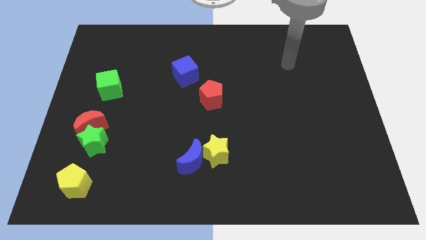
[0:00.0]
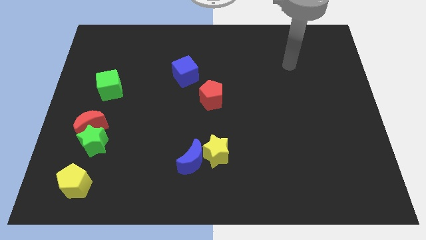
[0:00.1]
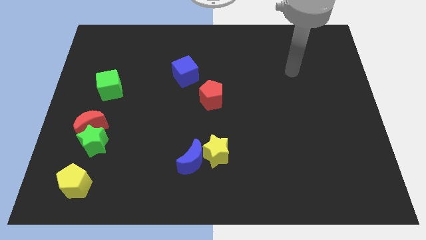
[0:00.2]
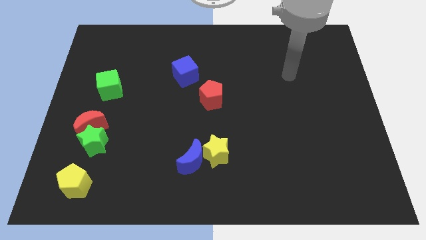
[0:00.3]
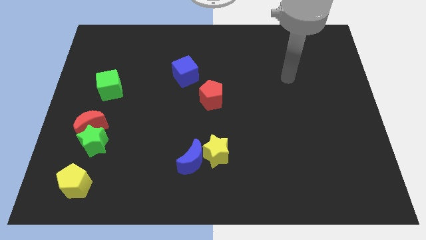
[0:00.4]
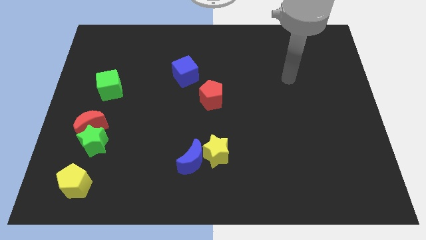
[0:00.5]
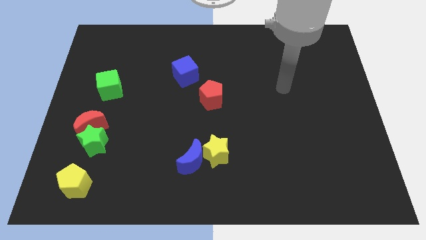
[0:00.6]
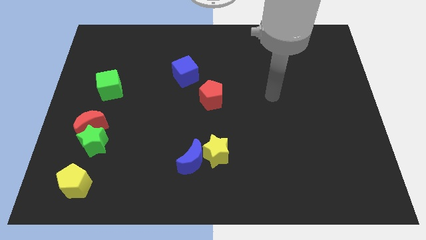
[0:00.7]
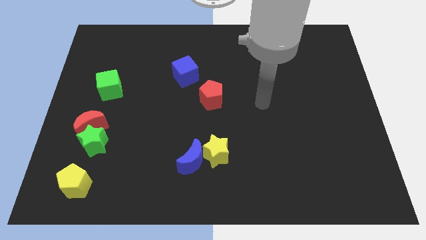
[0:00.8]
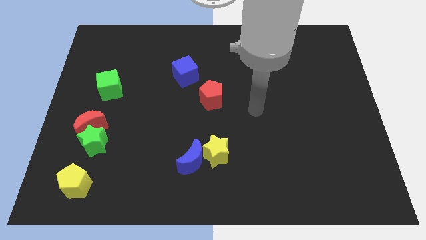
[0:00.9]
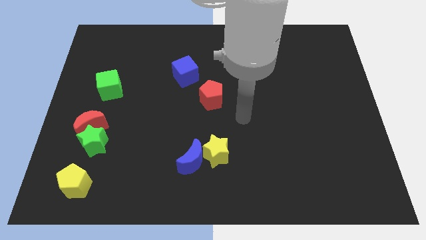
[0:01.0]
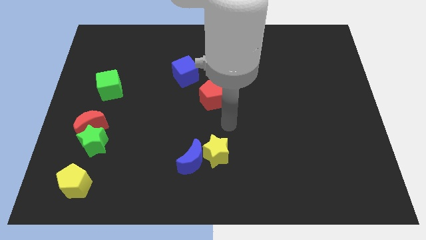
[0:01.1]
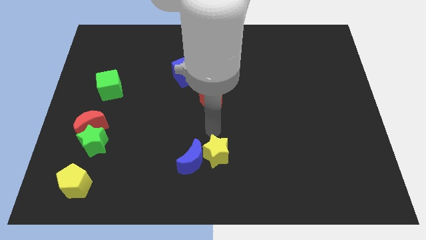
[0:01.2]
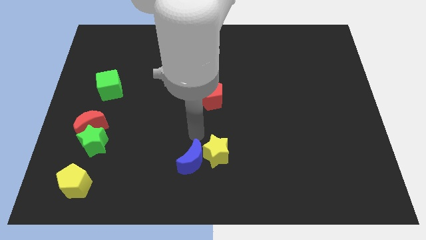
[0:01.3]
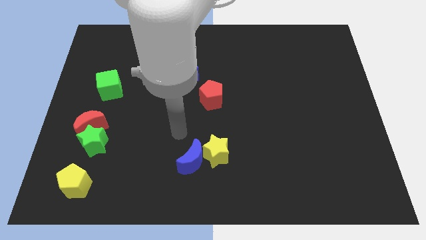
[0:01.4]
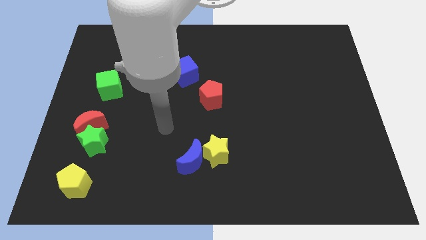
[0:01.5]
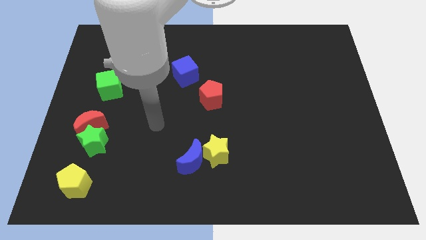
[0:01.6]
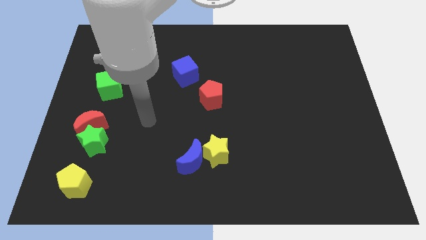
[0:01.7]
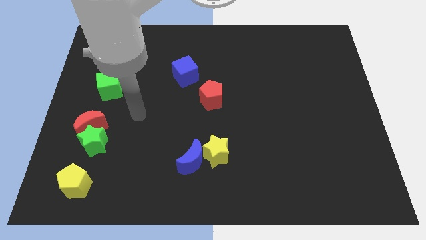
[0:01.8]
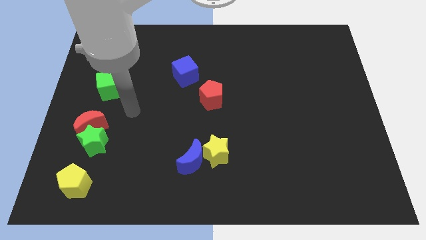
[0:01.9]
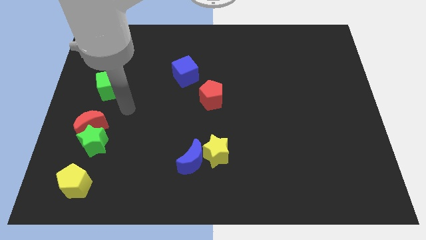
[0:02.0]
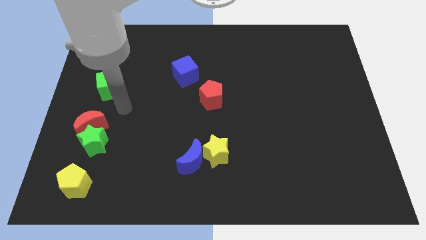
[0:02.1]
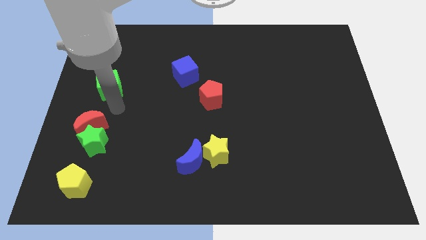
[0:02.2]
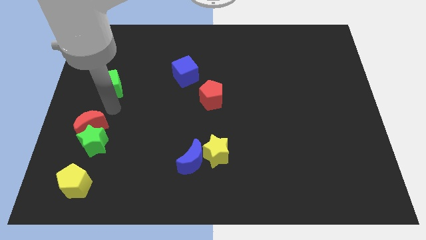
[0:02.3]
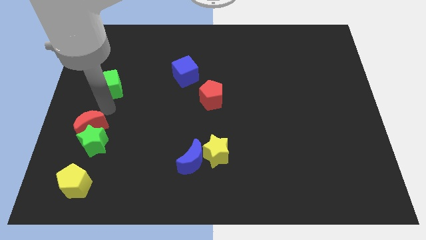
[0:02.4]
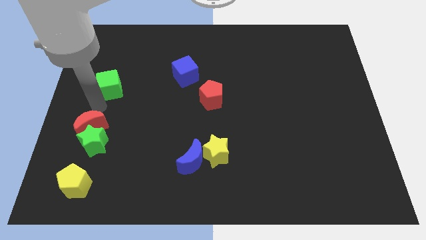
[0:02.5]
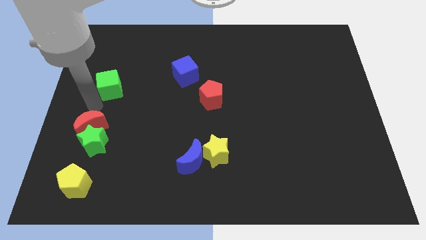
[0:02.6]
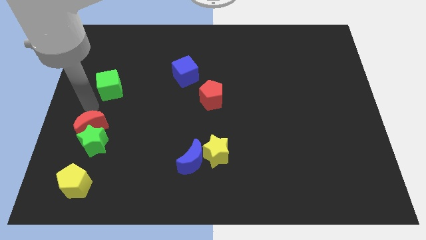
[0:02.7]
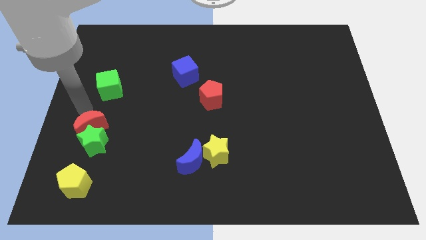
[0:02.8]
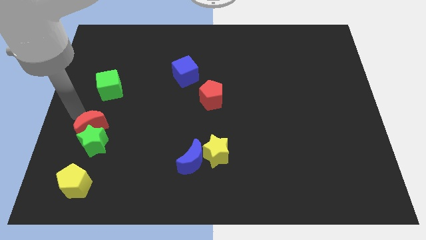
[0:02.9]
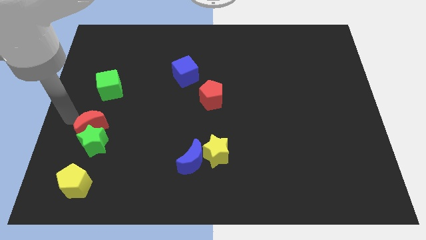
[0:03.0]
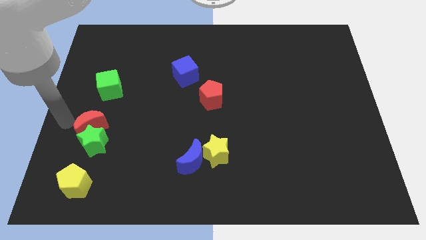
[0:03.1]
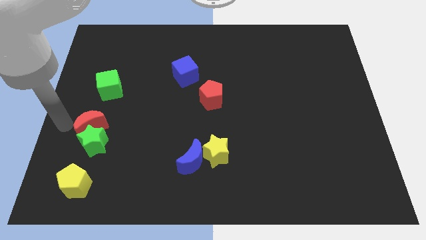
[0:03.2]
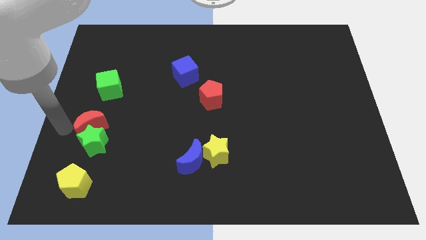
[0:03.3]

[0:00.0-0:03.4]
move your arm towards the red crescent

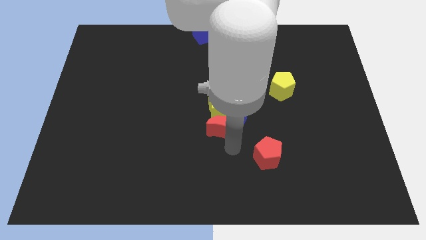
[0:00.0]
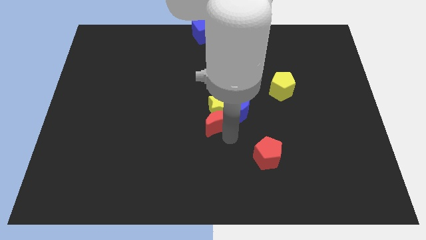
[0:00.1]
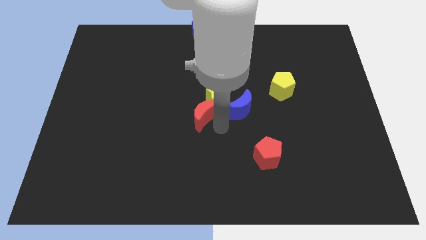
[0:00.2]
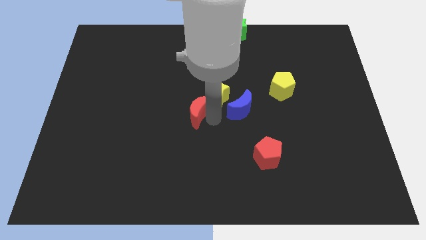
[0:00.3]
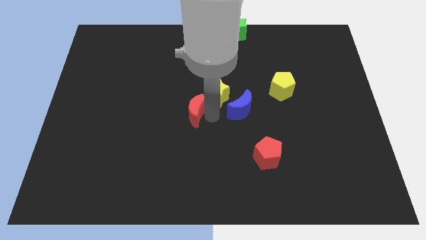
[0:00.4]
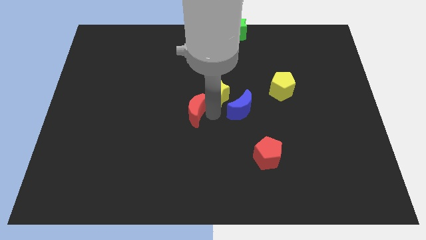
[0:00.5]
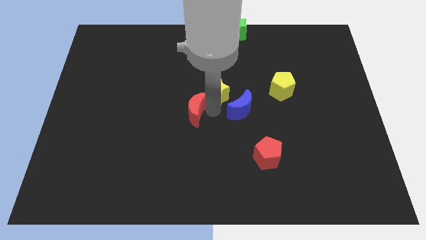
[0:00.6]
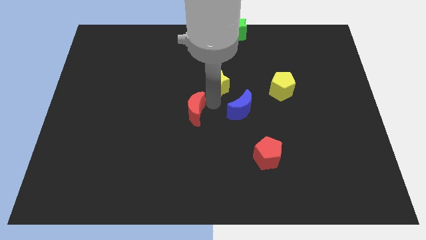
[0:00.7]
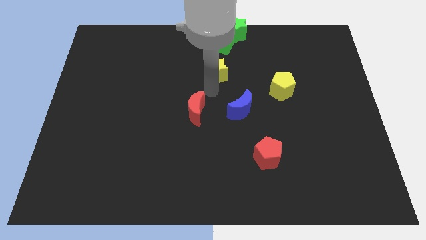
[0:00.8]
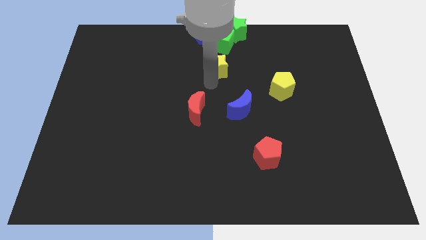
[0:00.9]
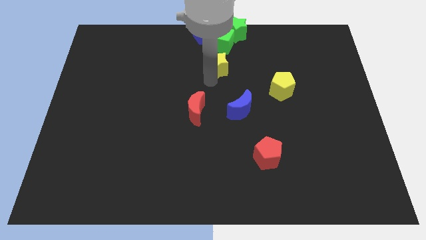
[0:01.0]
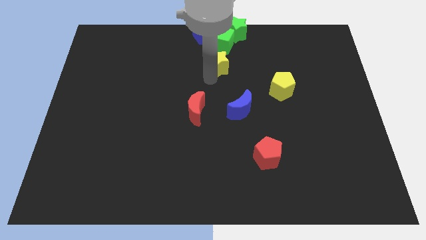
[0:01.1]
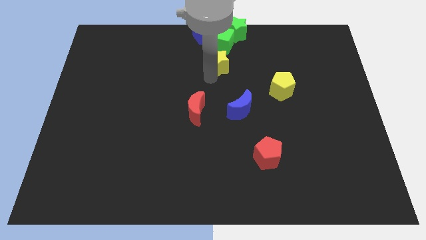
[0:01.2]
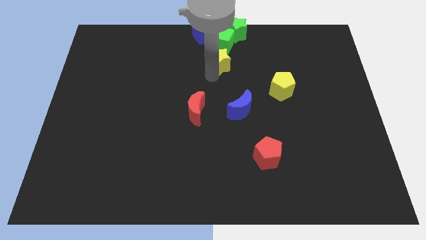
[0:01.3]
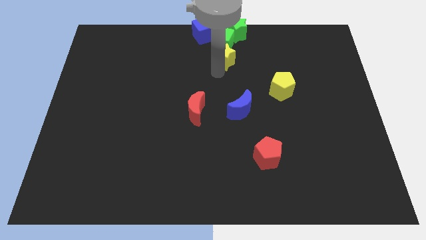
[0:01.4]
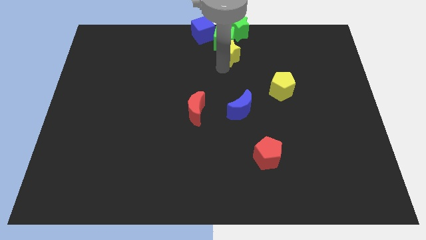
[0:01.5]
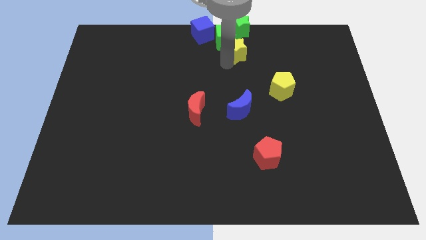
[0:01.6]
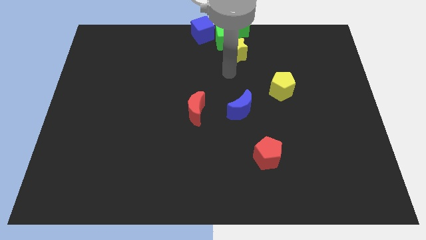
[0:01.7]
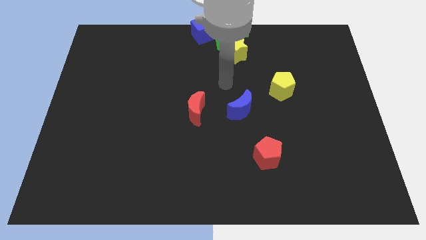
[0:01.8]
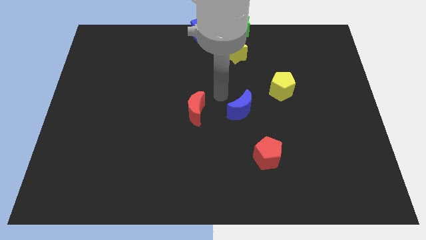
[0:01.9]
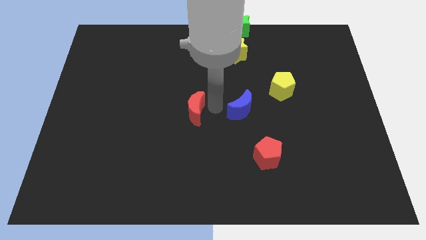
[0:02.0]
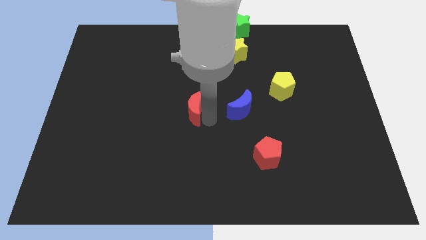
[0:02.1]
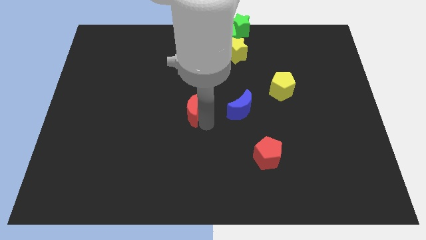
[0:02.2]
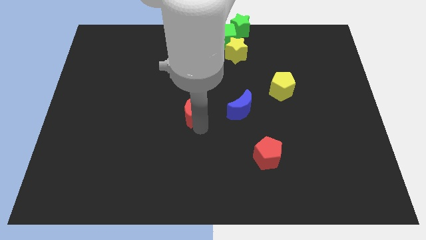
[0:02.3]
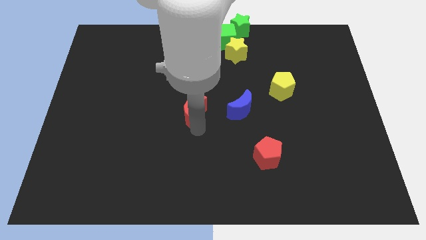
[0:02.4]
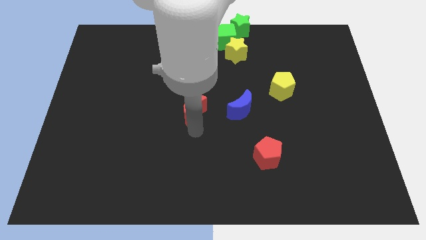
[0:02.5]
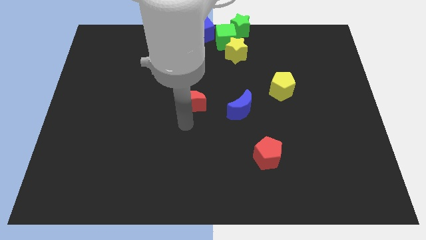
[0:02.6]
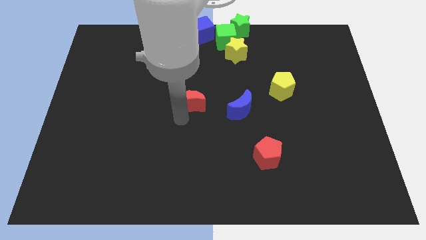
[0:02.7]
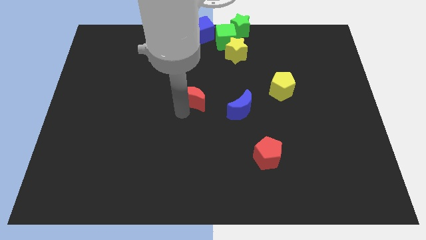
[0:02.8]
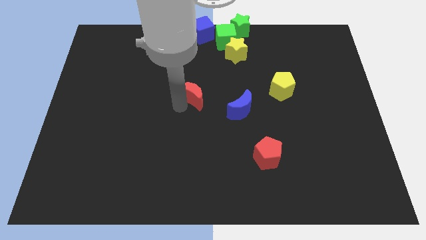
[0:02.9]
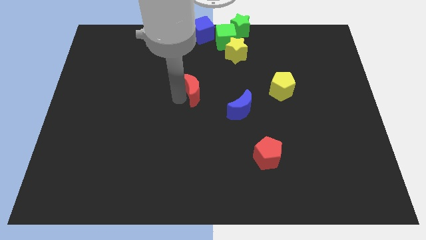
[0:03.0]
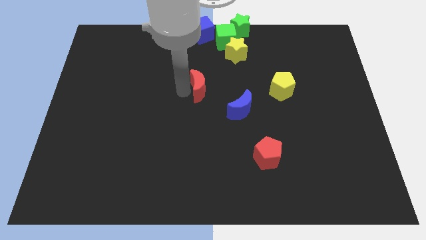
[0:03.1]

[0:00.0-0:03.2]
make a triangle out of yellow star red and the blue moon

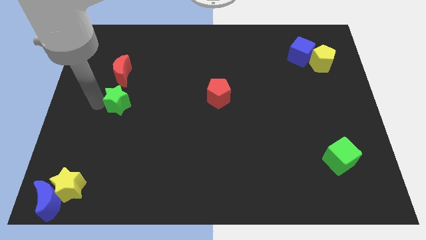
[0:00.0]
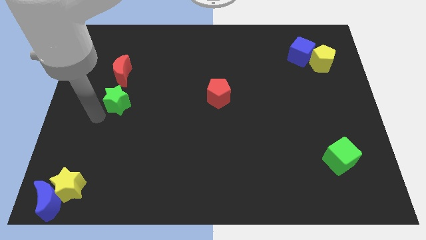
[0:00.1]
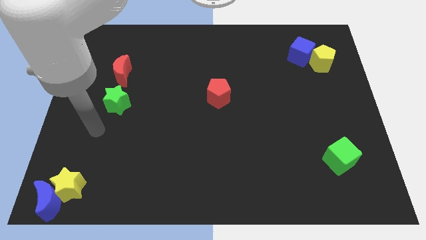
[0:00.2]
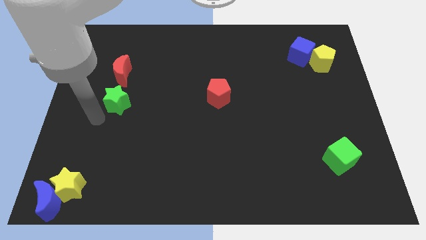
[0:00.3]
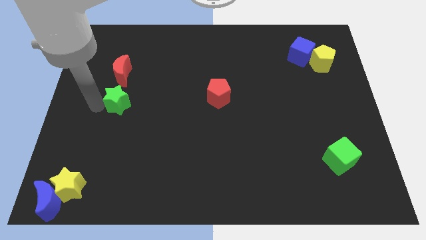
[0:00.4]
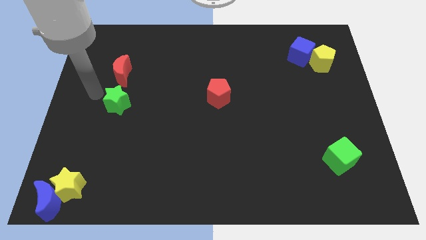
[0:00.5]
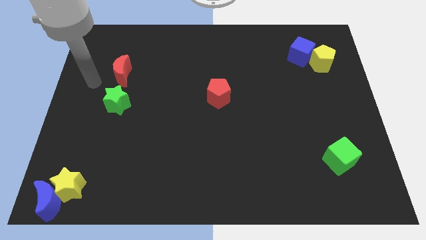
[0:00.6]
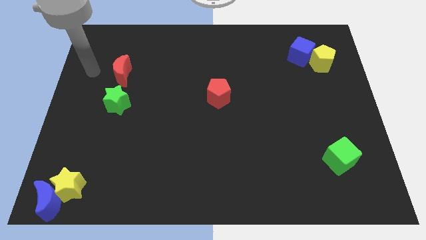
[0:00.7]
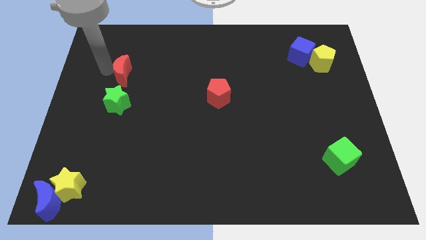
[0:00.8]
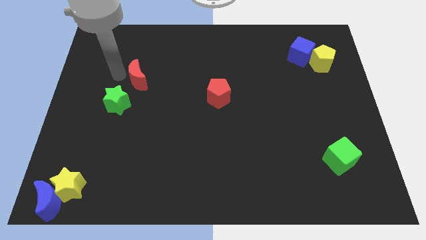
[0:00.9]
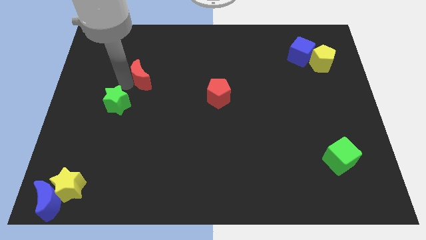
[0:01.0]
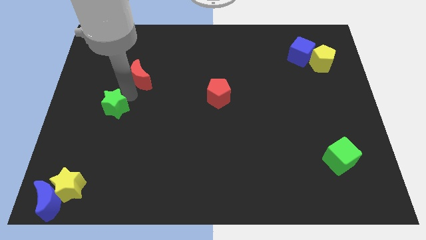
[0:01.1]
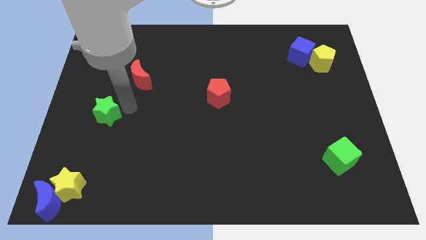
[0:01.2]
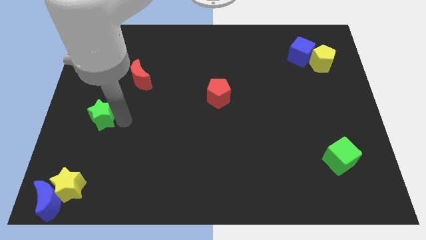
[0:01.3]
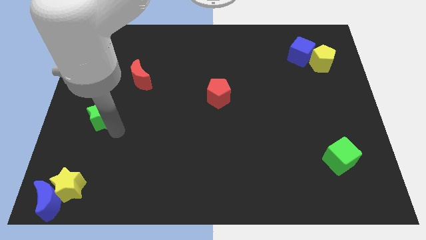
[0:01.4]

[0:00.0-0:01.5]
move green star away from the red moon

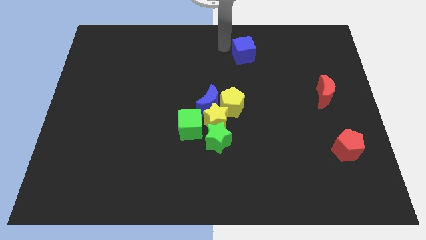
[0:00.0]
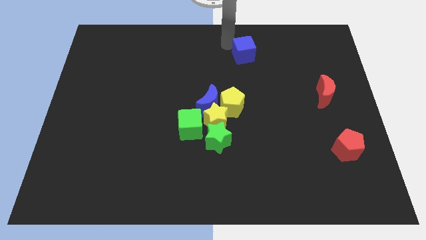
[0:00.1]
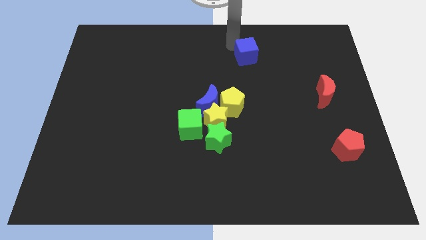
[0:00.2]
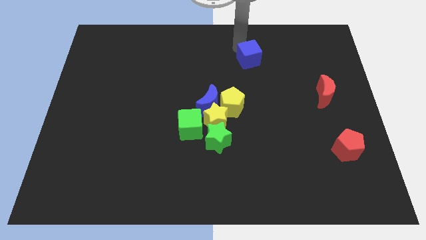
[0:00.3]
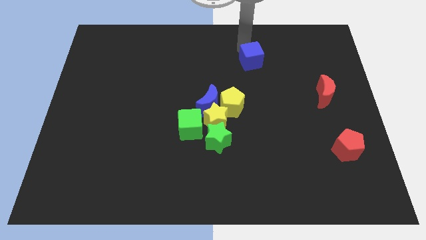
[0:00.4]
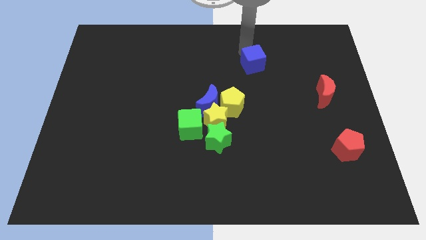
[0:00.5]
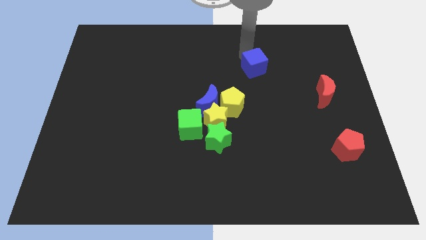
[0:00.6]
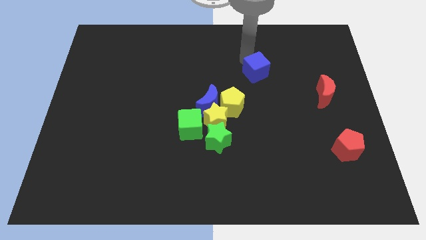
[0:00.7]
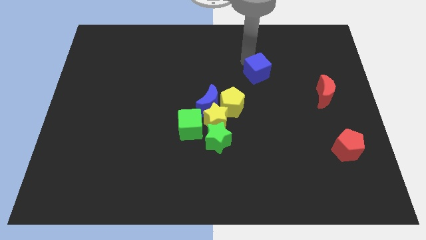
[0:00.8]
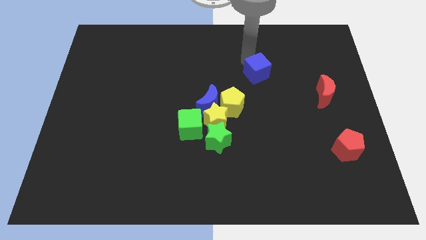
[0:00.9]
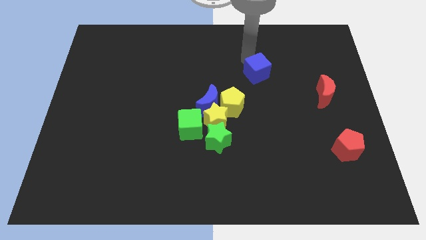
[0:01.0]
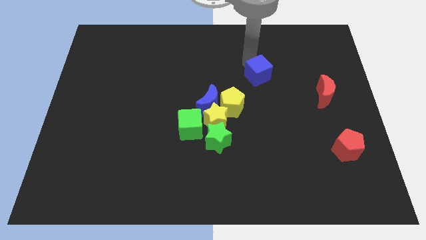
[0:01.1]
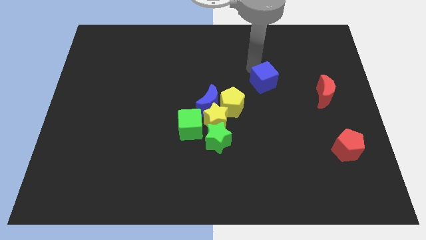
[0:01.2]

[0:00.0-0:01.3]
push the blue cube to the center
